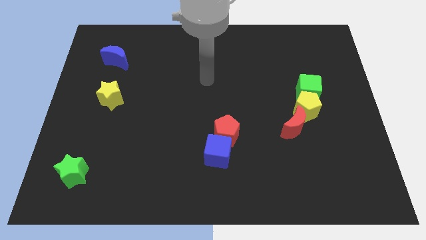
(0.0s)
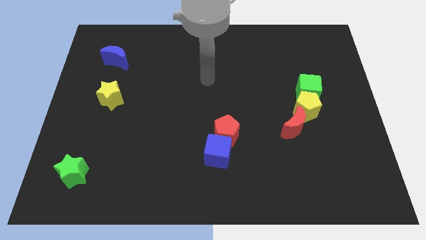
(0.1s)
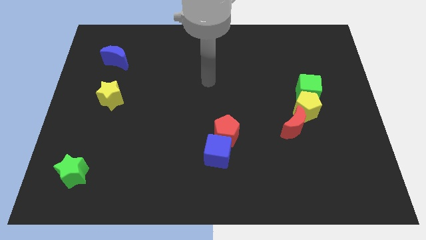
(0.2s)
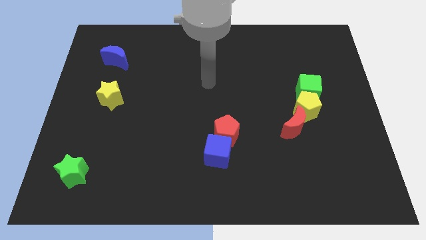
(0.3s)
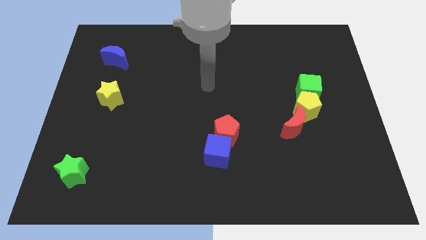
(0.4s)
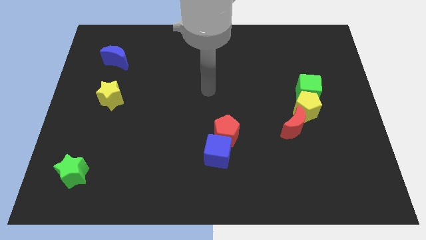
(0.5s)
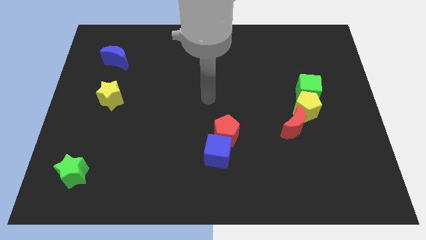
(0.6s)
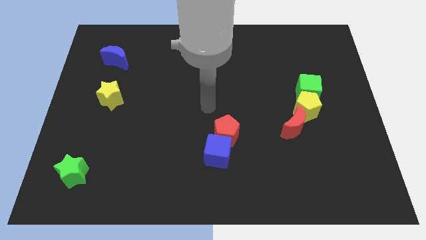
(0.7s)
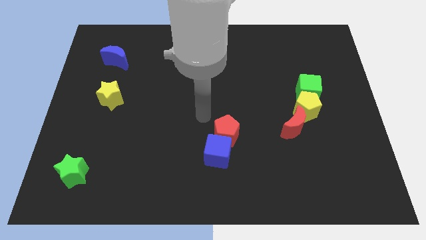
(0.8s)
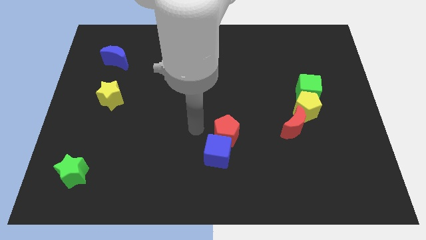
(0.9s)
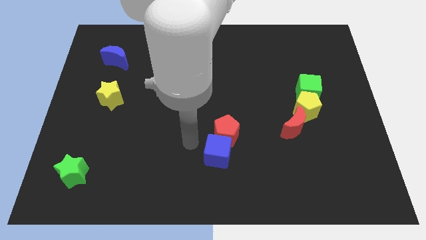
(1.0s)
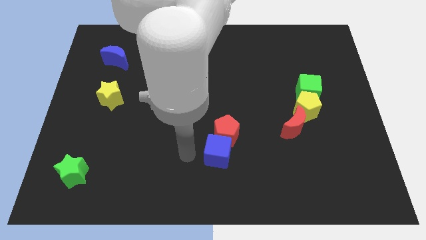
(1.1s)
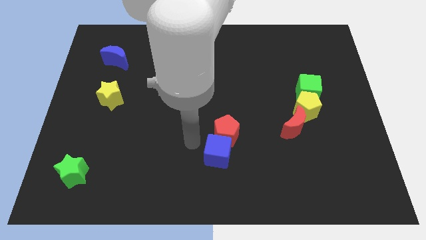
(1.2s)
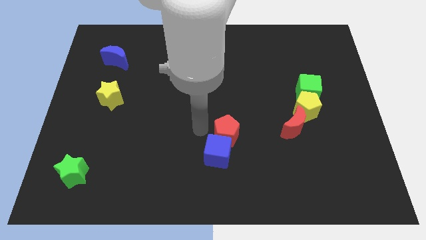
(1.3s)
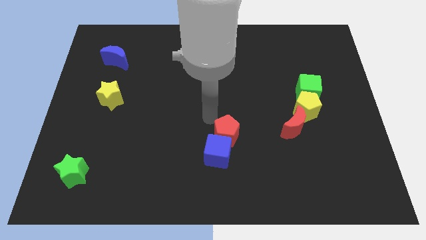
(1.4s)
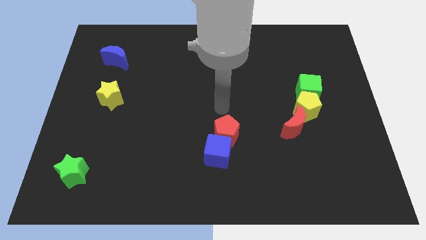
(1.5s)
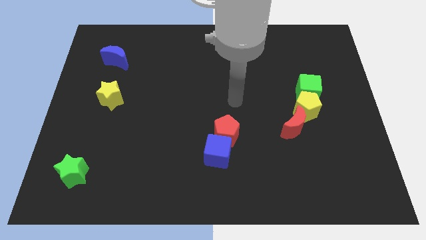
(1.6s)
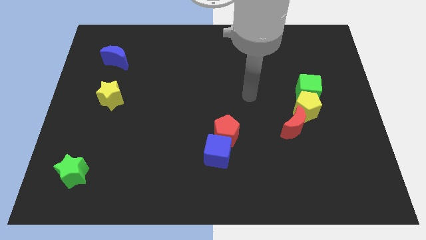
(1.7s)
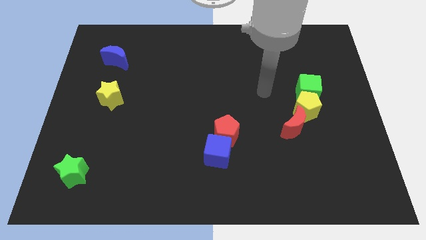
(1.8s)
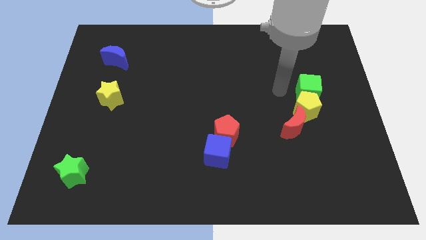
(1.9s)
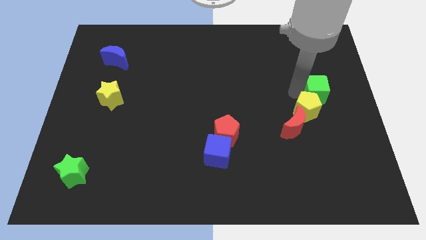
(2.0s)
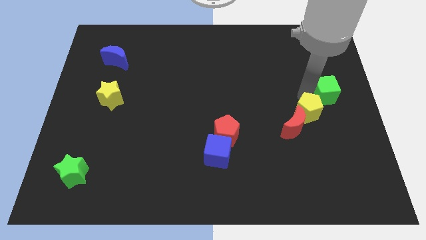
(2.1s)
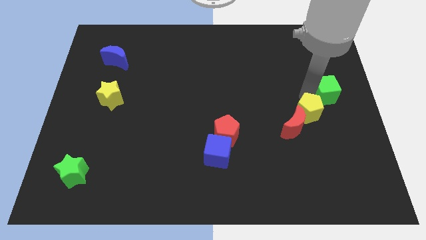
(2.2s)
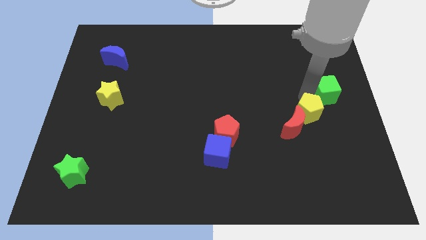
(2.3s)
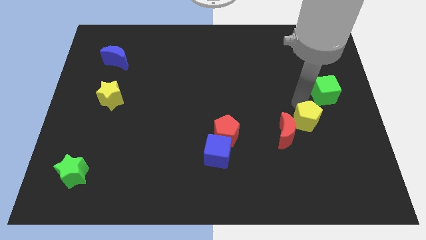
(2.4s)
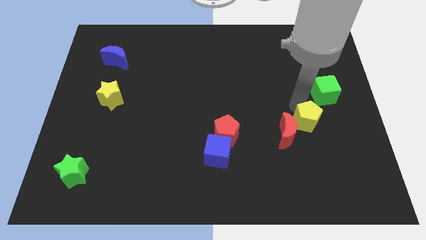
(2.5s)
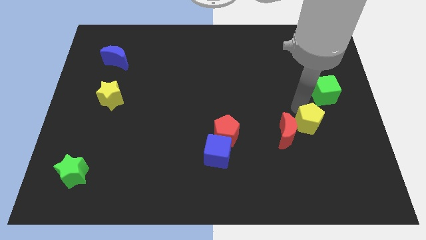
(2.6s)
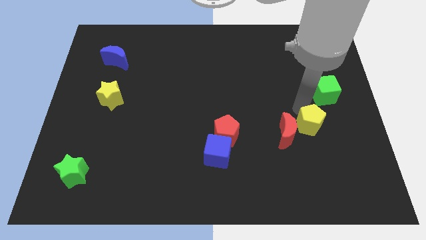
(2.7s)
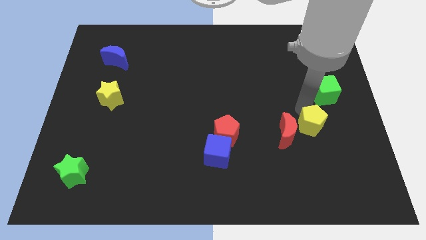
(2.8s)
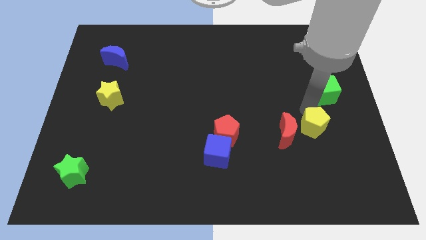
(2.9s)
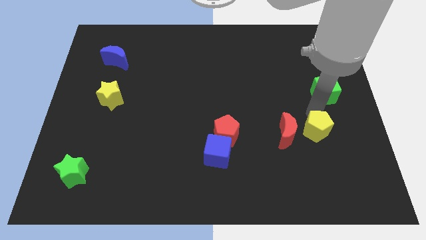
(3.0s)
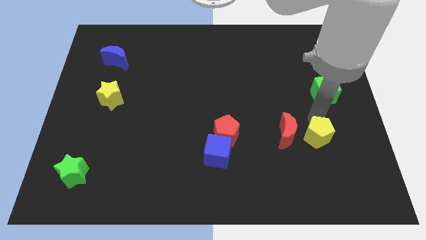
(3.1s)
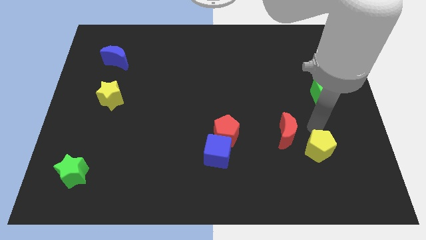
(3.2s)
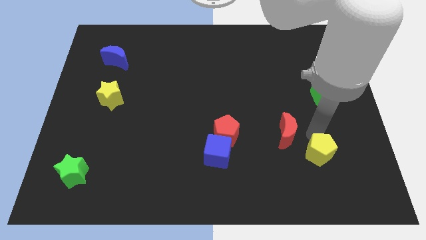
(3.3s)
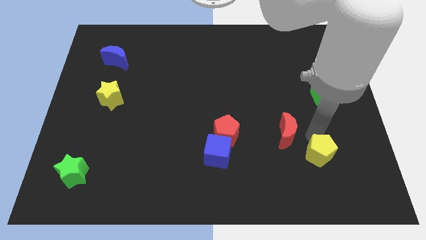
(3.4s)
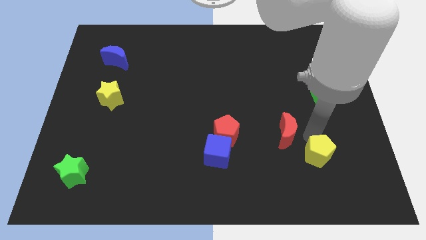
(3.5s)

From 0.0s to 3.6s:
separate all the three yellow pentagon red crescent and green cube

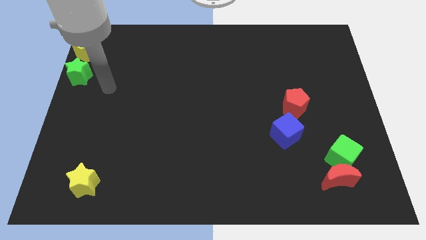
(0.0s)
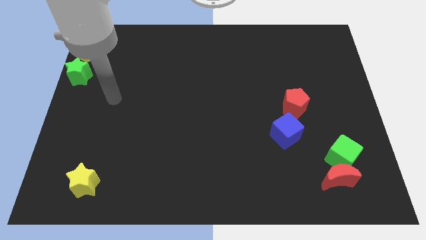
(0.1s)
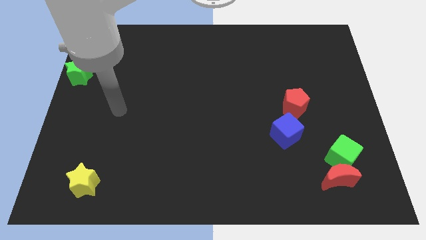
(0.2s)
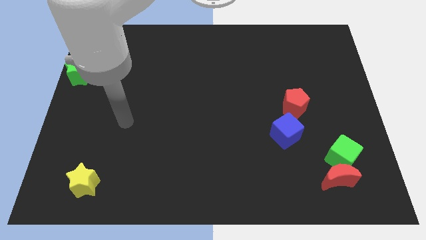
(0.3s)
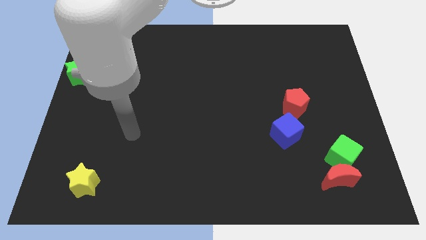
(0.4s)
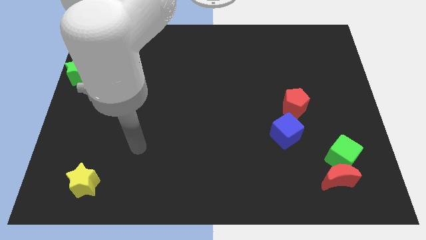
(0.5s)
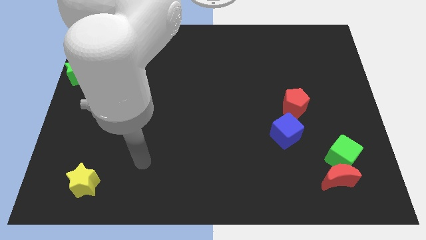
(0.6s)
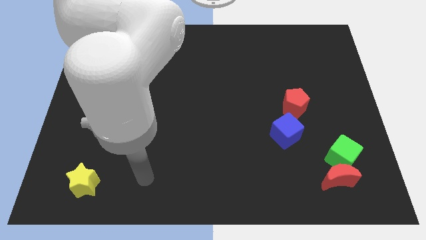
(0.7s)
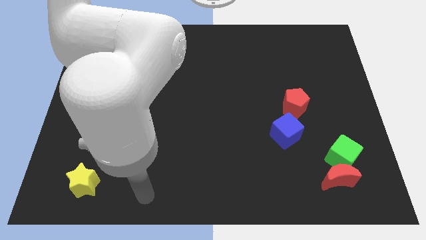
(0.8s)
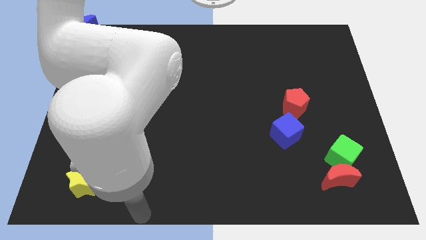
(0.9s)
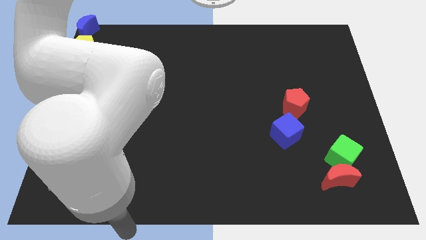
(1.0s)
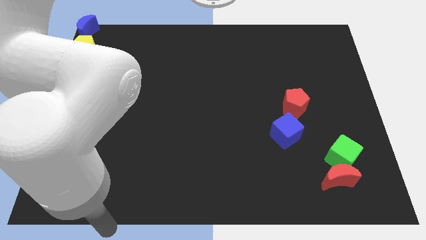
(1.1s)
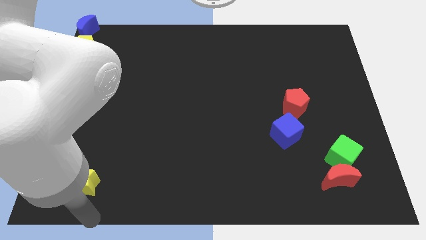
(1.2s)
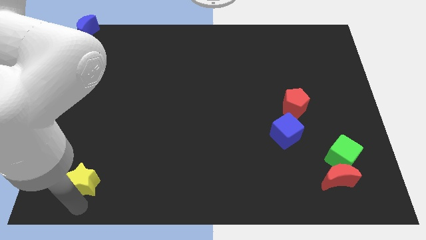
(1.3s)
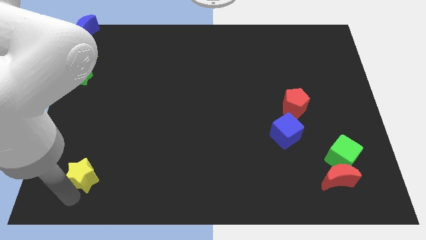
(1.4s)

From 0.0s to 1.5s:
place the arm close to the yellow star

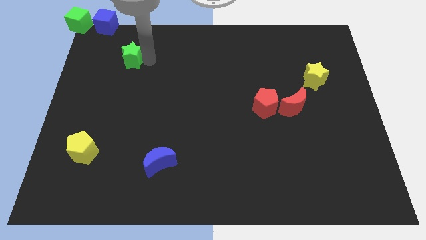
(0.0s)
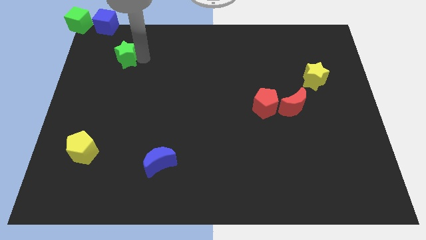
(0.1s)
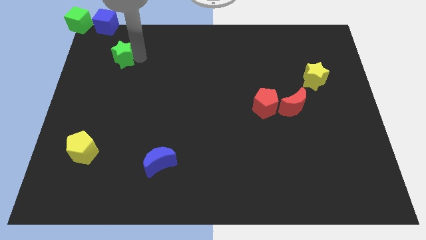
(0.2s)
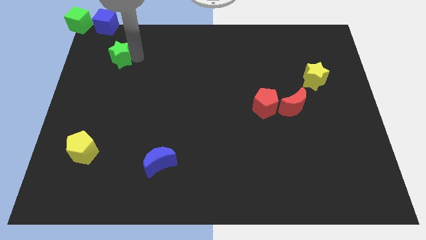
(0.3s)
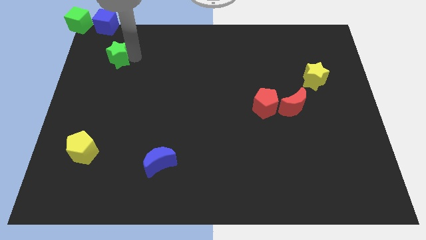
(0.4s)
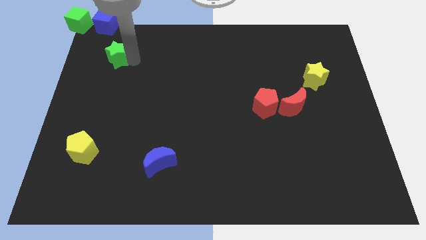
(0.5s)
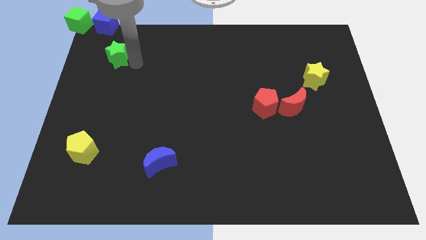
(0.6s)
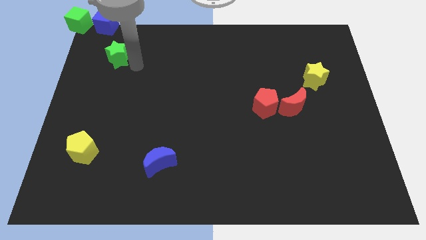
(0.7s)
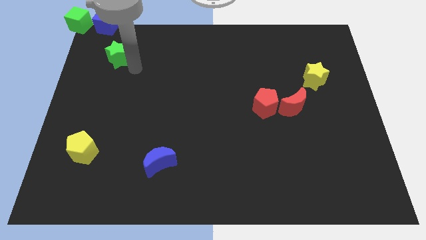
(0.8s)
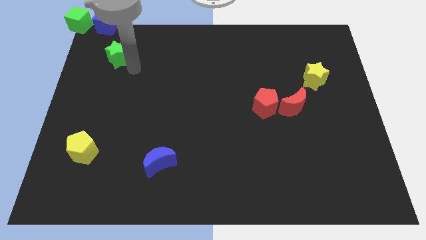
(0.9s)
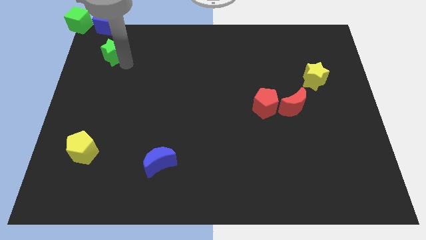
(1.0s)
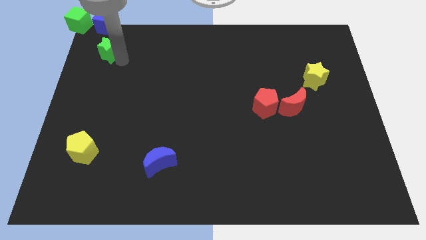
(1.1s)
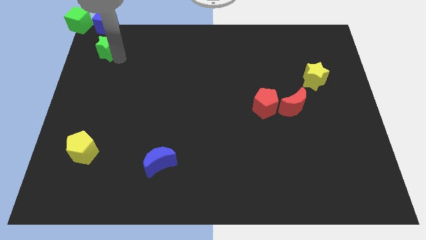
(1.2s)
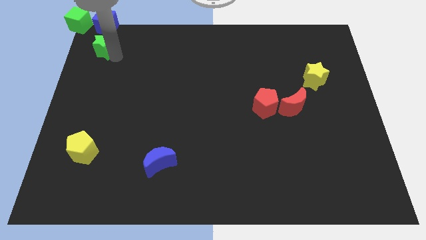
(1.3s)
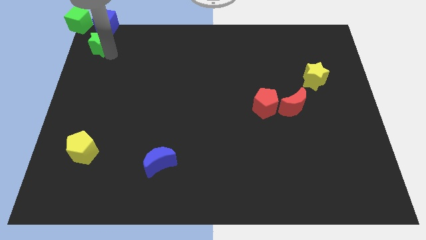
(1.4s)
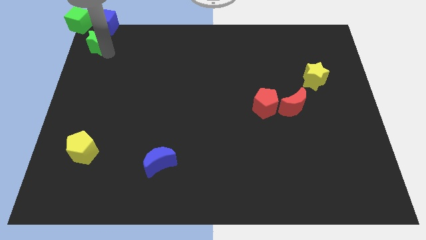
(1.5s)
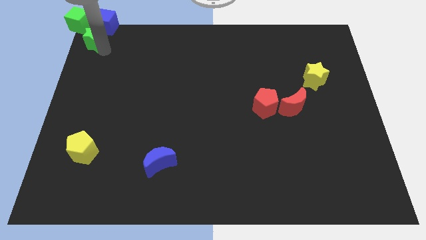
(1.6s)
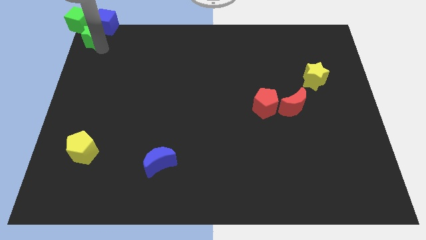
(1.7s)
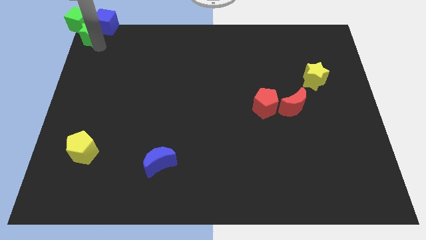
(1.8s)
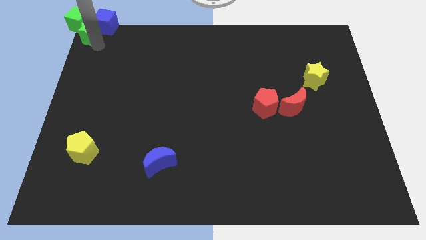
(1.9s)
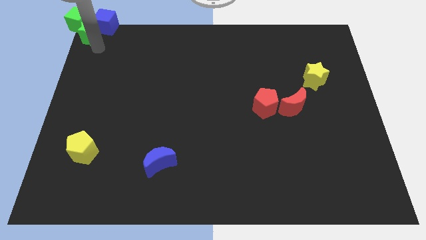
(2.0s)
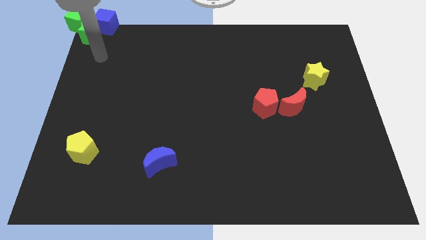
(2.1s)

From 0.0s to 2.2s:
move the green star to the bottom of the green and blue cubes

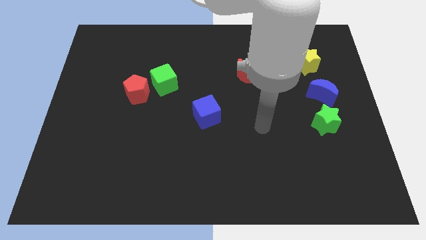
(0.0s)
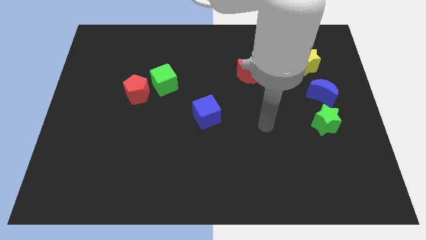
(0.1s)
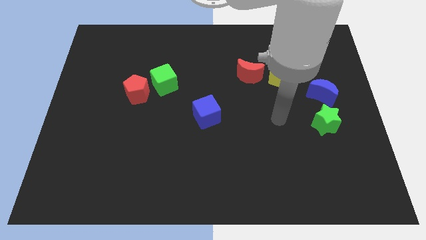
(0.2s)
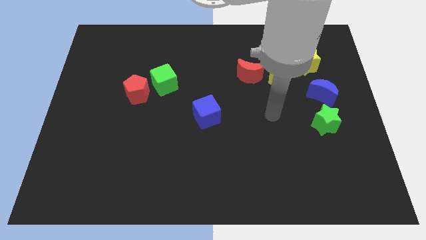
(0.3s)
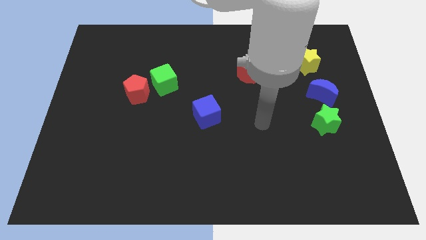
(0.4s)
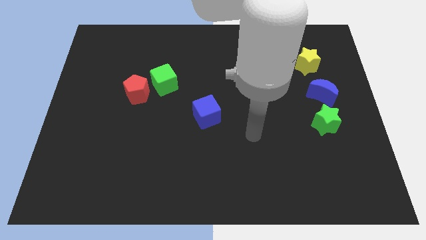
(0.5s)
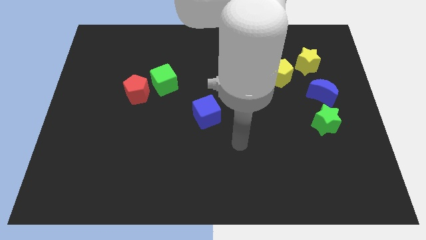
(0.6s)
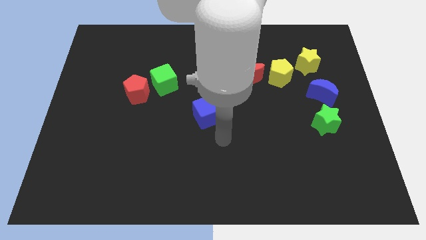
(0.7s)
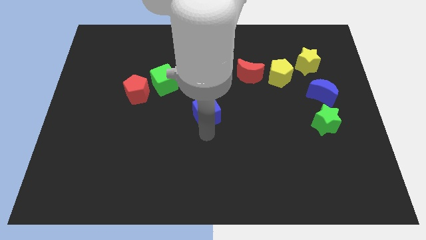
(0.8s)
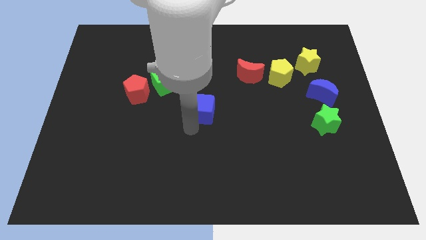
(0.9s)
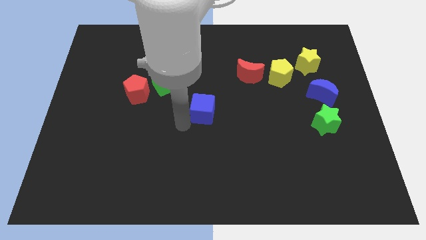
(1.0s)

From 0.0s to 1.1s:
touch the bottom of blue cube

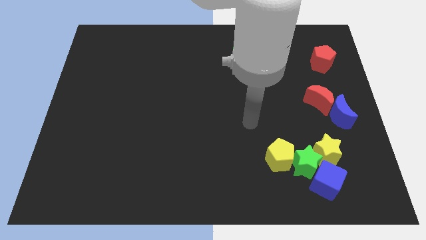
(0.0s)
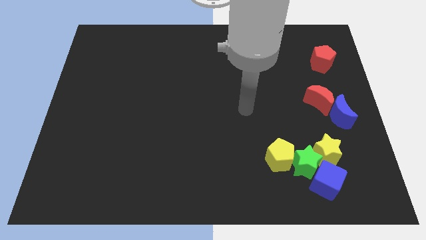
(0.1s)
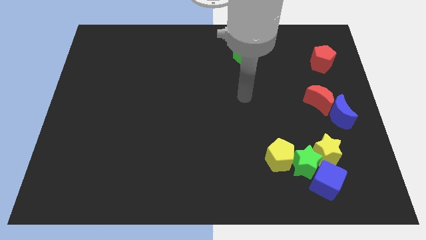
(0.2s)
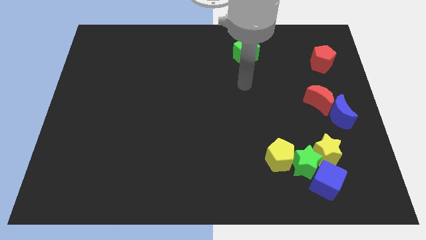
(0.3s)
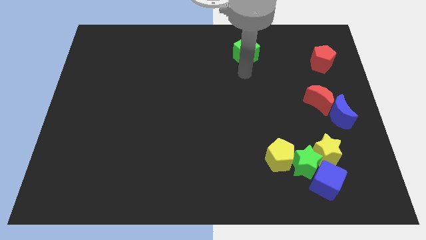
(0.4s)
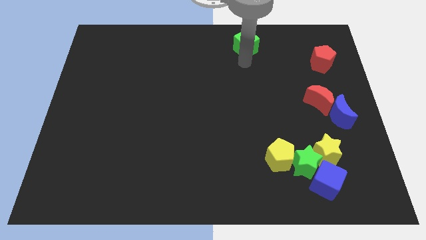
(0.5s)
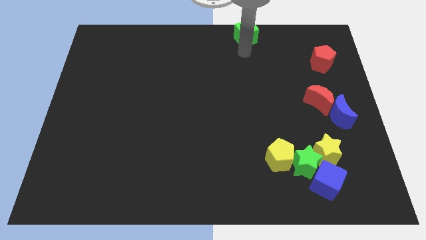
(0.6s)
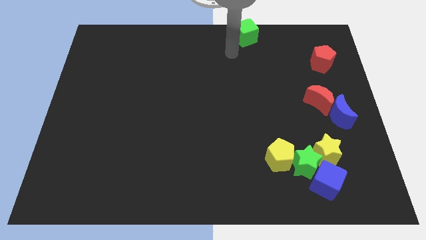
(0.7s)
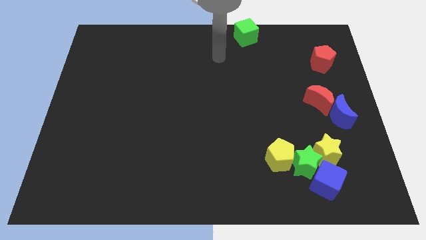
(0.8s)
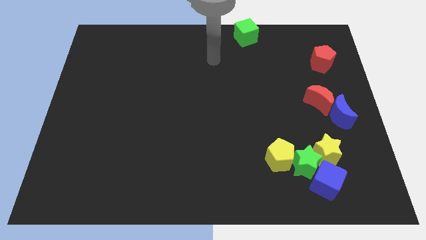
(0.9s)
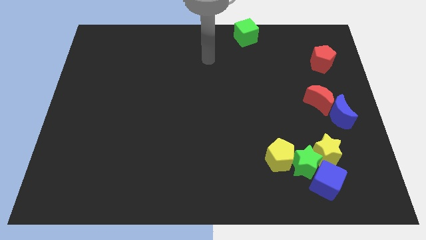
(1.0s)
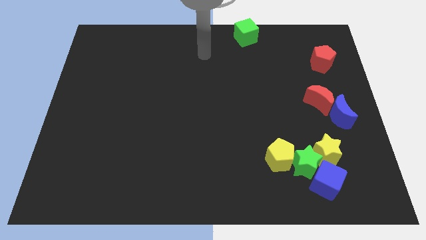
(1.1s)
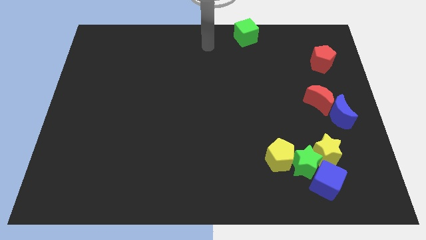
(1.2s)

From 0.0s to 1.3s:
move the green cube to the top center of the board
